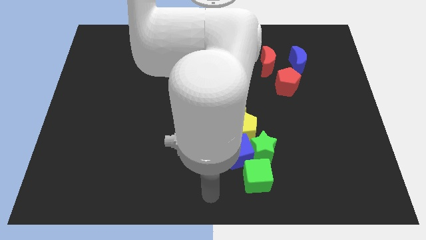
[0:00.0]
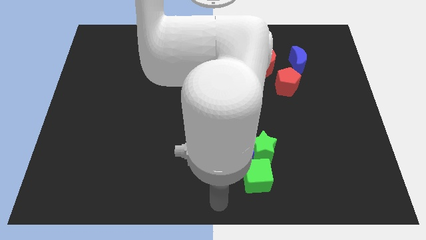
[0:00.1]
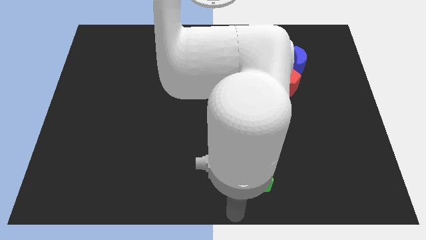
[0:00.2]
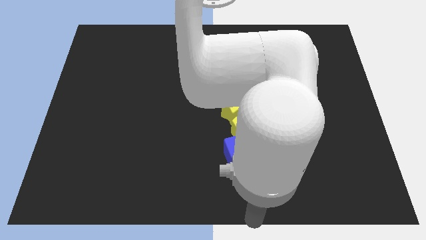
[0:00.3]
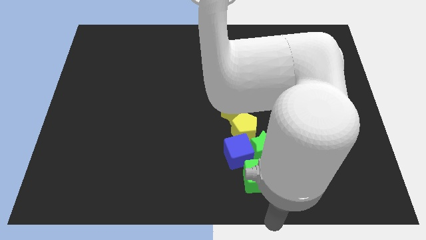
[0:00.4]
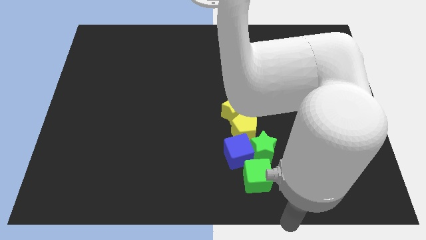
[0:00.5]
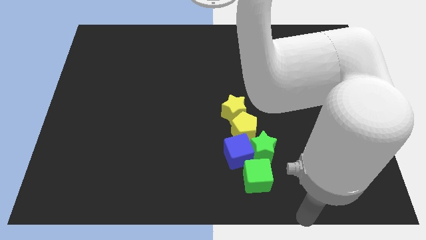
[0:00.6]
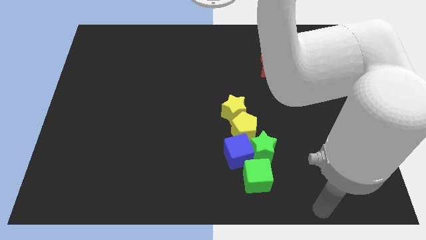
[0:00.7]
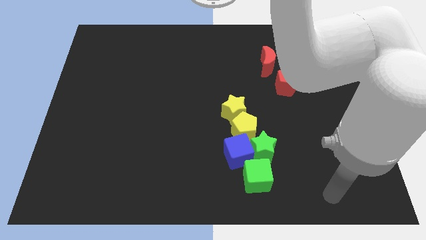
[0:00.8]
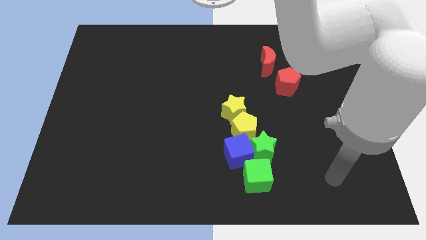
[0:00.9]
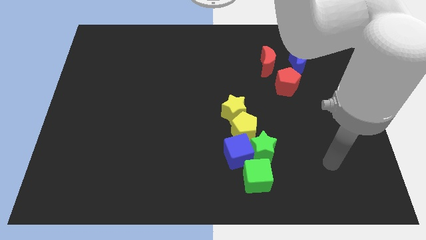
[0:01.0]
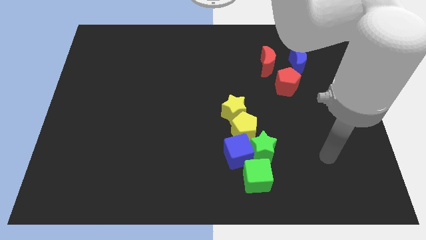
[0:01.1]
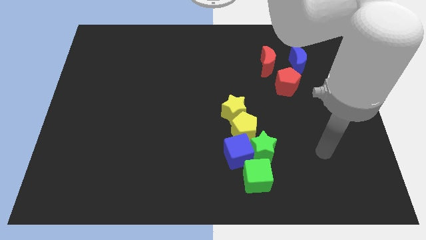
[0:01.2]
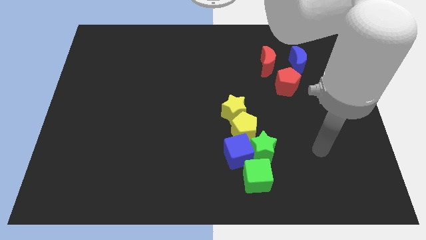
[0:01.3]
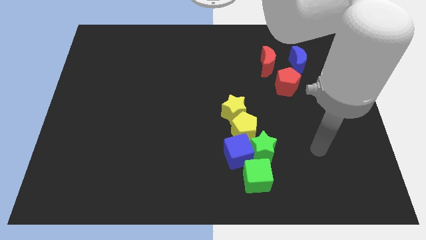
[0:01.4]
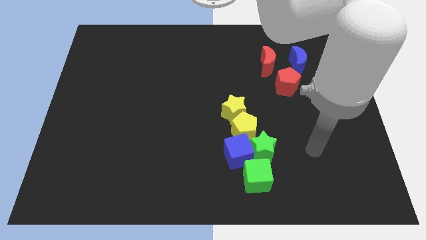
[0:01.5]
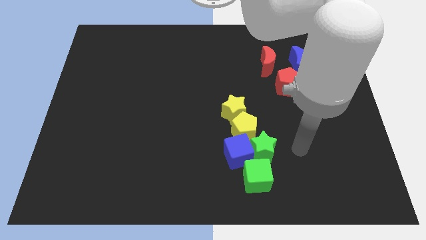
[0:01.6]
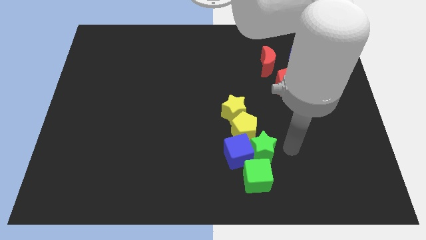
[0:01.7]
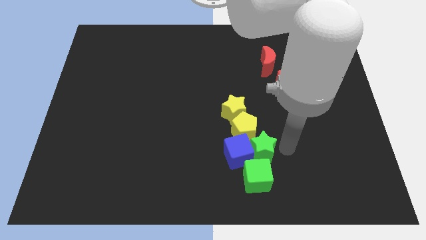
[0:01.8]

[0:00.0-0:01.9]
place your arm to the right of the green star

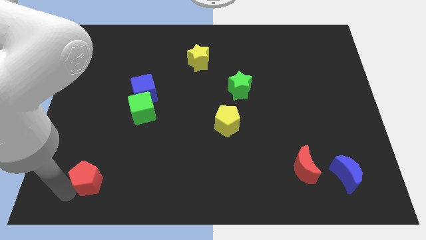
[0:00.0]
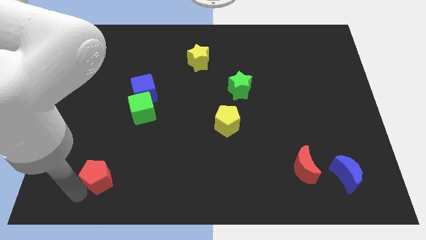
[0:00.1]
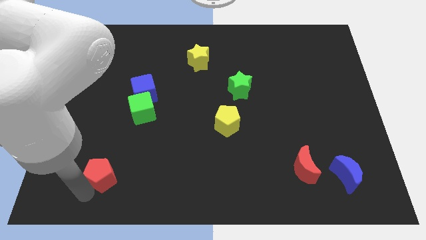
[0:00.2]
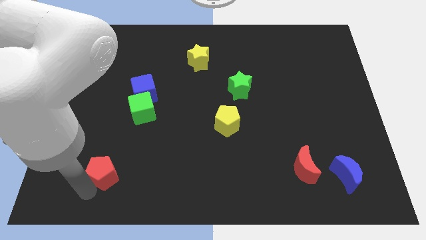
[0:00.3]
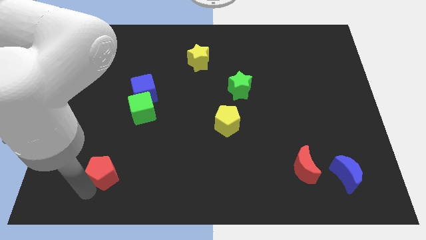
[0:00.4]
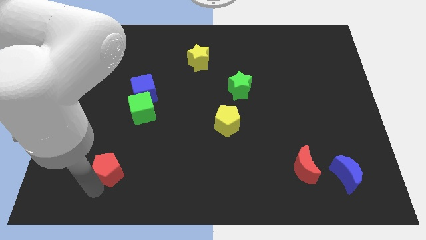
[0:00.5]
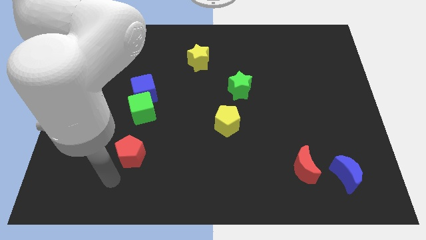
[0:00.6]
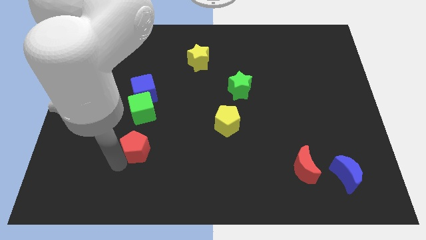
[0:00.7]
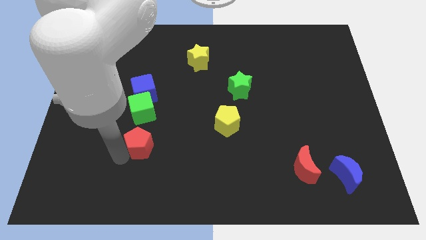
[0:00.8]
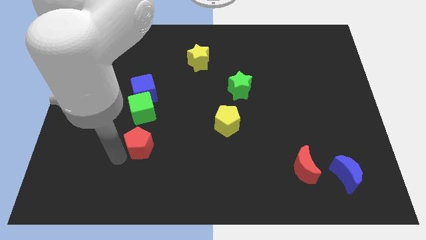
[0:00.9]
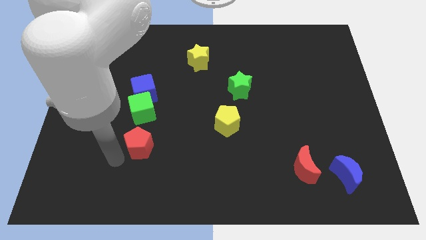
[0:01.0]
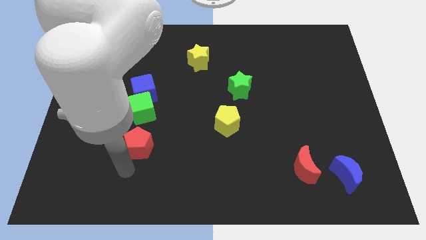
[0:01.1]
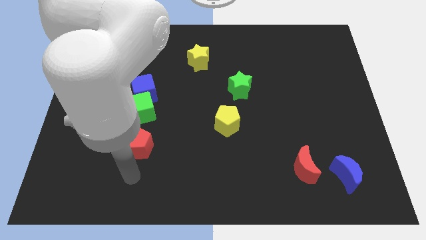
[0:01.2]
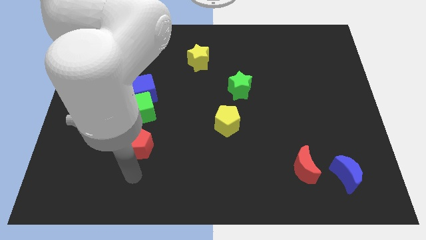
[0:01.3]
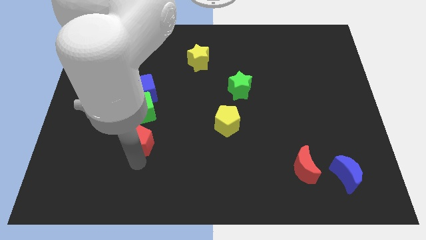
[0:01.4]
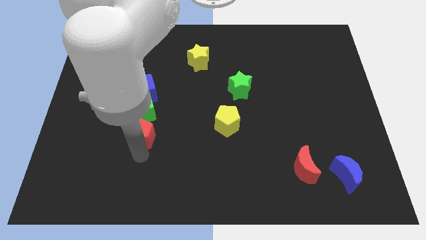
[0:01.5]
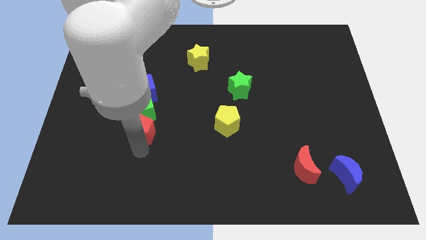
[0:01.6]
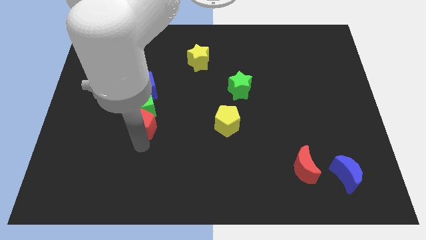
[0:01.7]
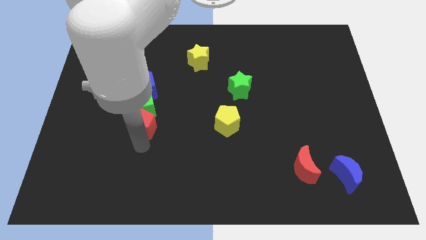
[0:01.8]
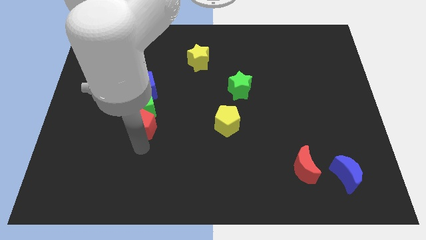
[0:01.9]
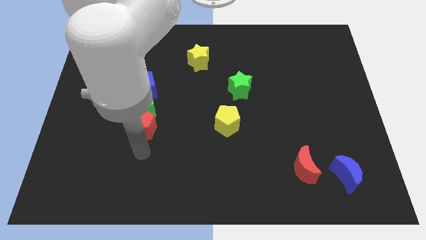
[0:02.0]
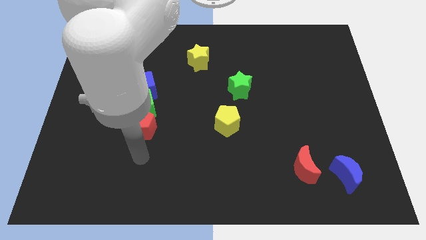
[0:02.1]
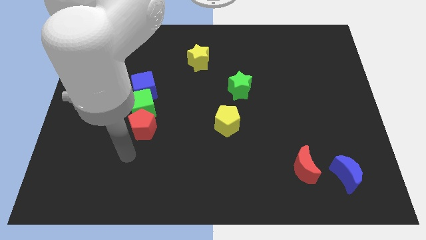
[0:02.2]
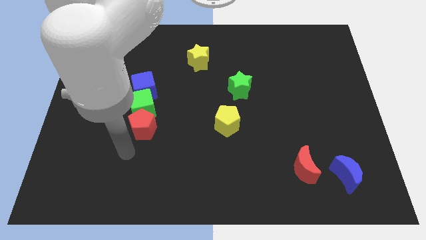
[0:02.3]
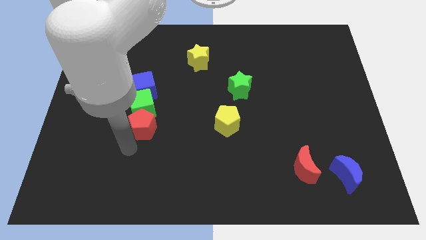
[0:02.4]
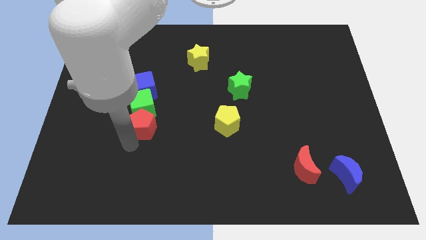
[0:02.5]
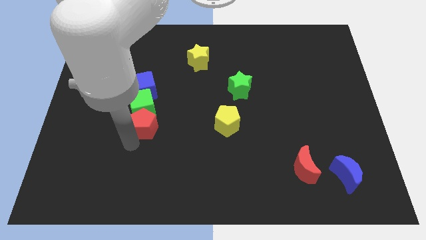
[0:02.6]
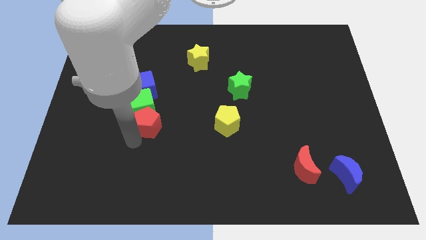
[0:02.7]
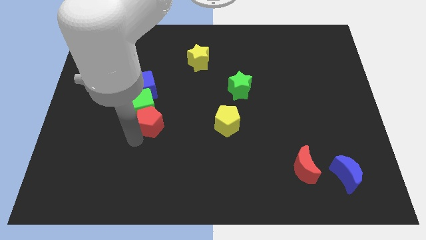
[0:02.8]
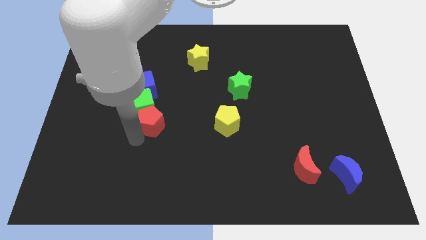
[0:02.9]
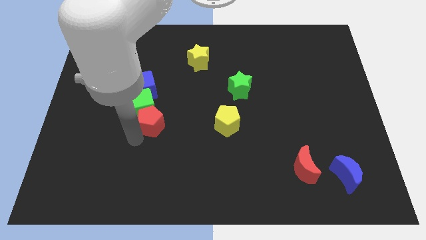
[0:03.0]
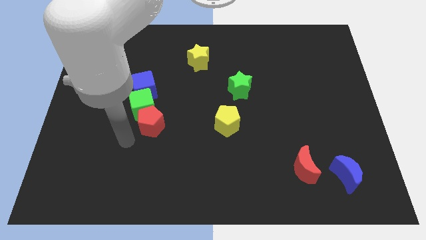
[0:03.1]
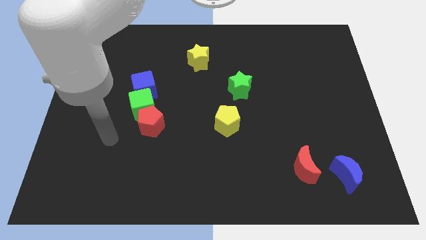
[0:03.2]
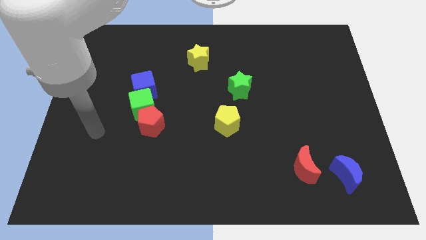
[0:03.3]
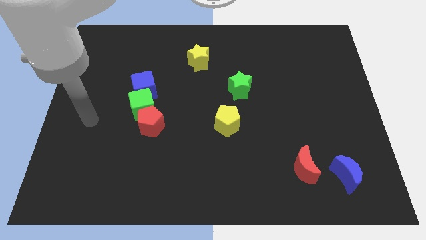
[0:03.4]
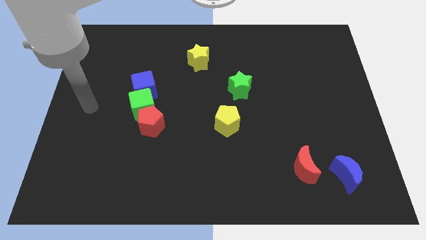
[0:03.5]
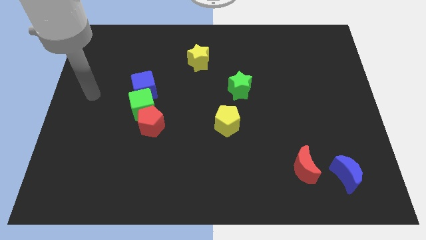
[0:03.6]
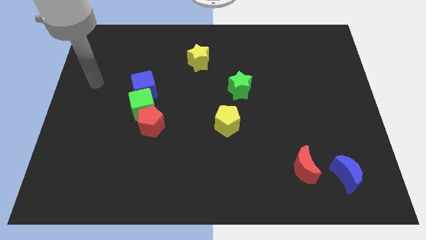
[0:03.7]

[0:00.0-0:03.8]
move the red pentagon into the green cube

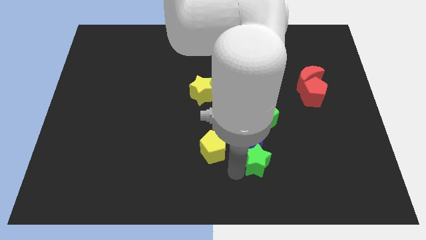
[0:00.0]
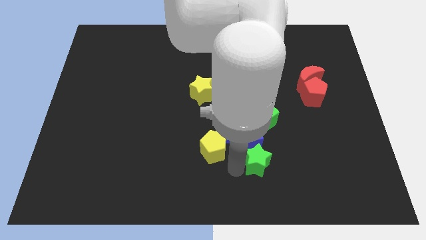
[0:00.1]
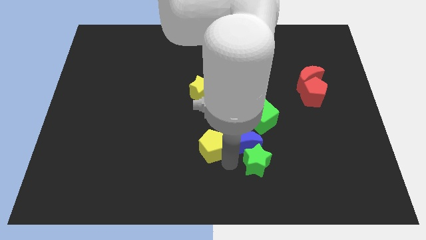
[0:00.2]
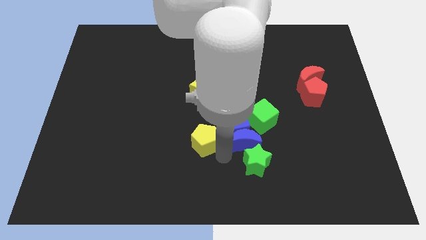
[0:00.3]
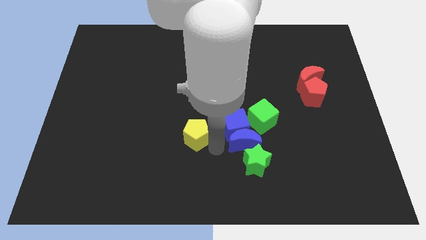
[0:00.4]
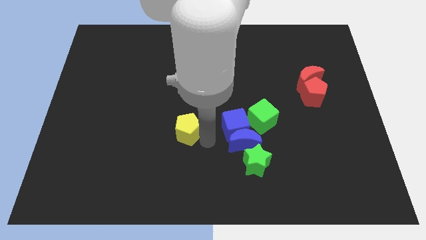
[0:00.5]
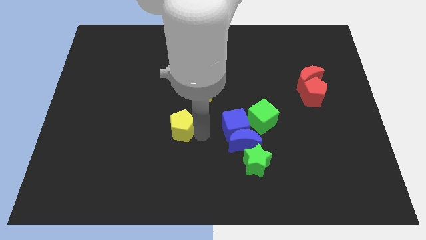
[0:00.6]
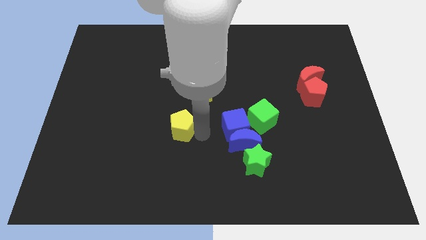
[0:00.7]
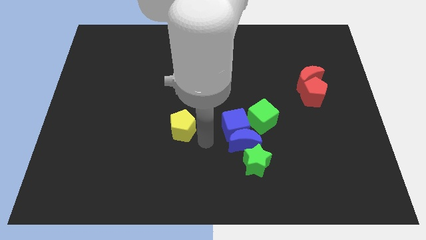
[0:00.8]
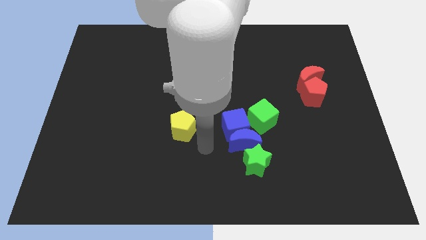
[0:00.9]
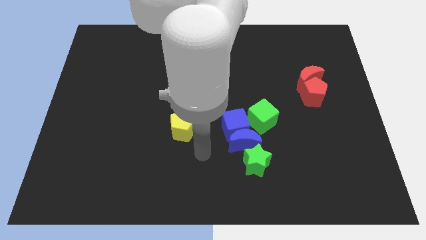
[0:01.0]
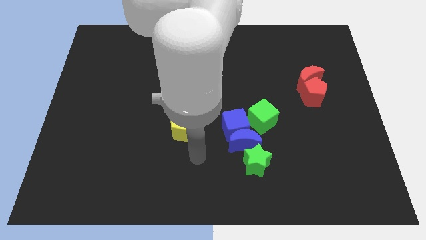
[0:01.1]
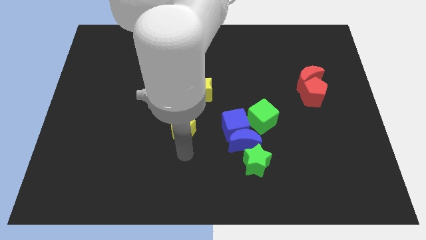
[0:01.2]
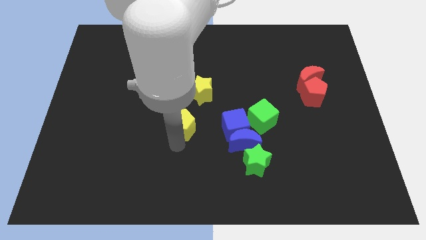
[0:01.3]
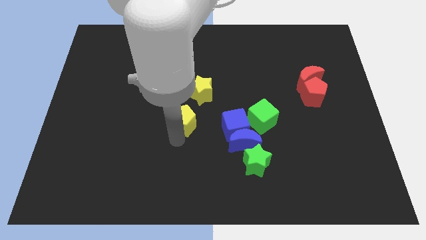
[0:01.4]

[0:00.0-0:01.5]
push the yellow pentagon to the left of the blue cube

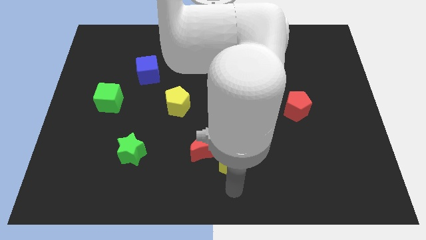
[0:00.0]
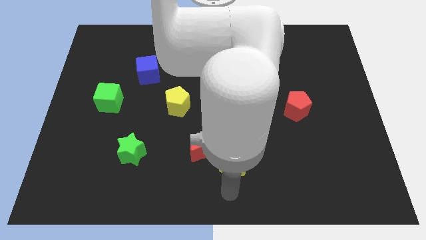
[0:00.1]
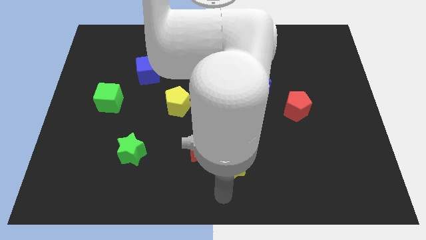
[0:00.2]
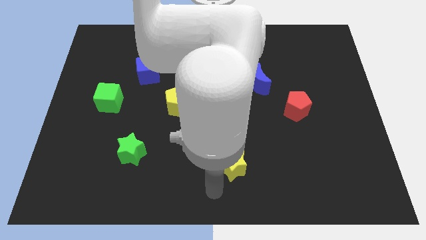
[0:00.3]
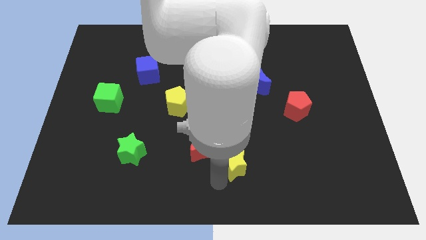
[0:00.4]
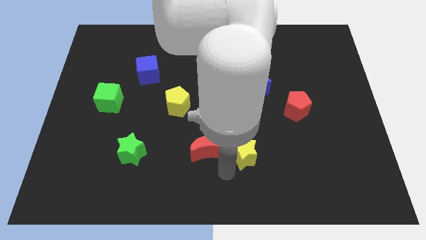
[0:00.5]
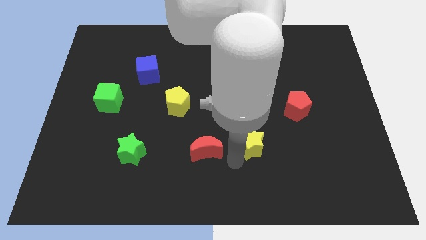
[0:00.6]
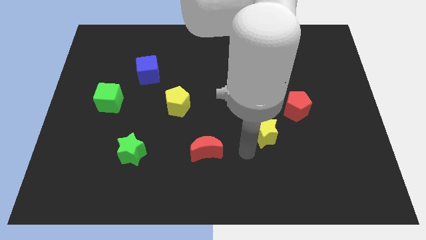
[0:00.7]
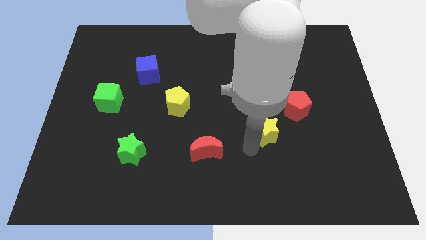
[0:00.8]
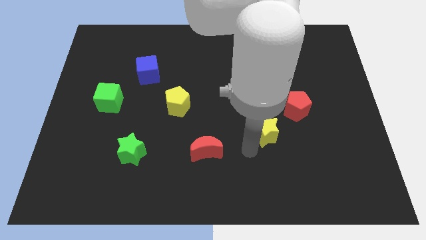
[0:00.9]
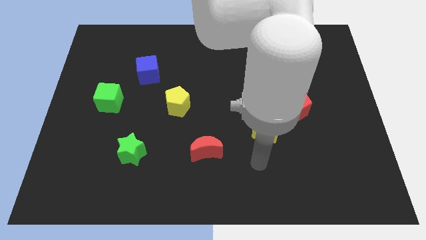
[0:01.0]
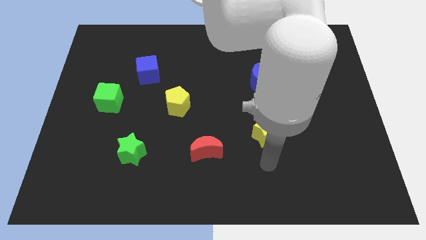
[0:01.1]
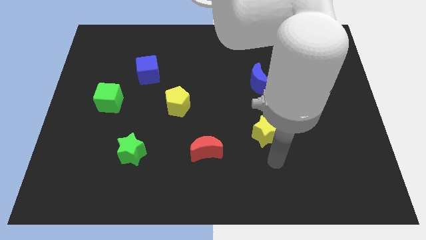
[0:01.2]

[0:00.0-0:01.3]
place the yellow star in between red crescent and red pentagon

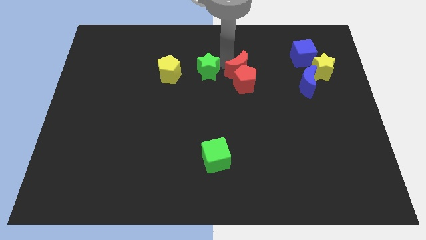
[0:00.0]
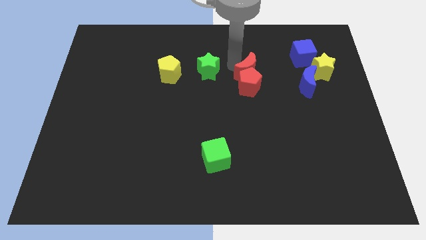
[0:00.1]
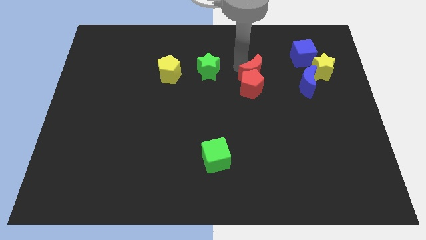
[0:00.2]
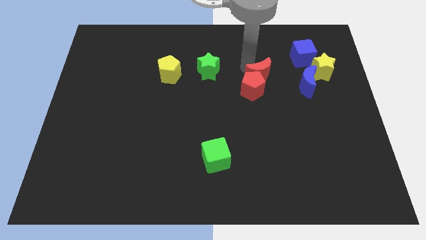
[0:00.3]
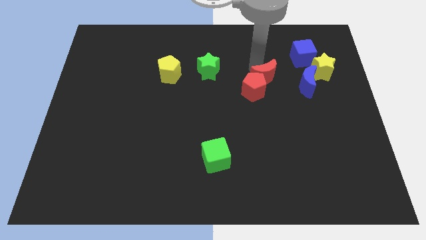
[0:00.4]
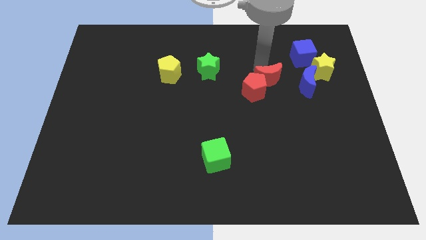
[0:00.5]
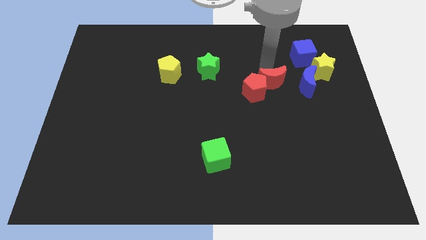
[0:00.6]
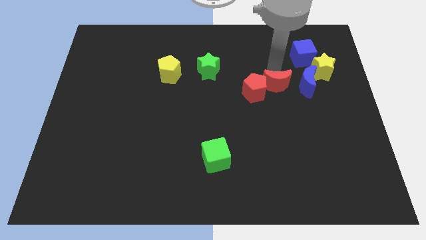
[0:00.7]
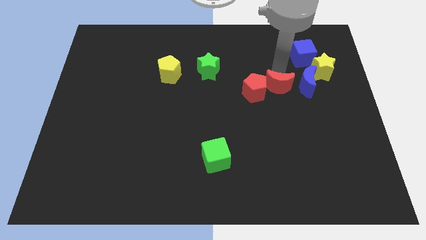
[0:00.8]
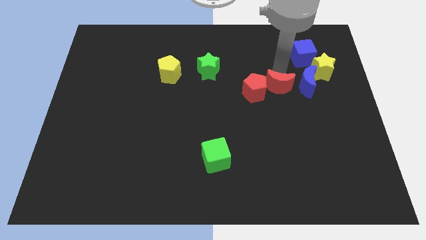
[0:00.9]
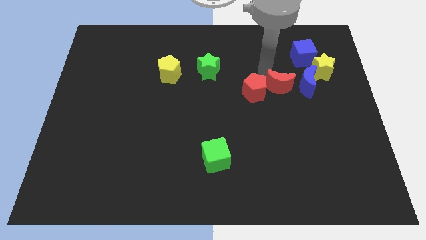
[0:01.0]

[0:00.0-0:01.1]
push the red moon slightly downwards
